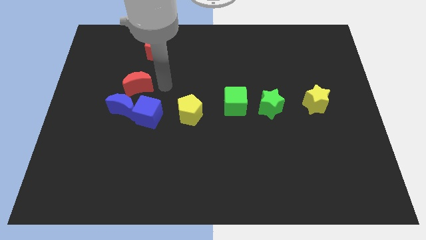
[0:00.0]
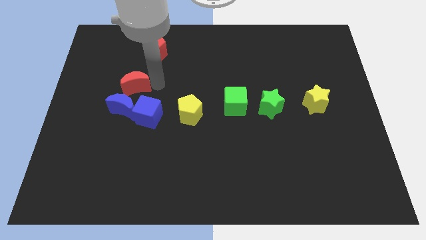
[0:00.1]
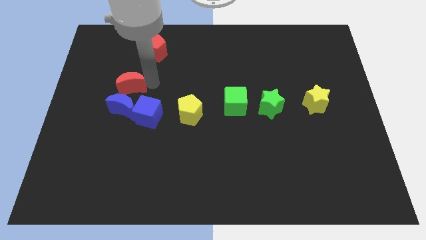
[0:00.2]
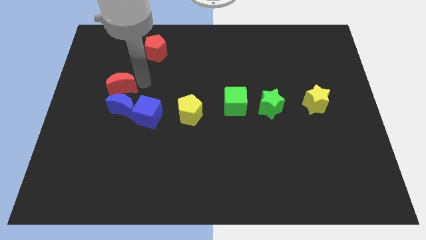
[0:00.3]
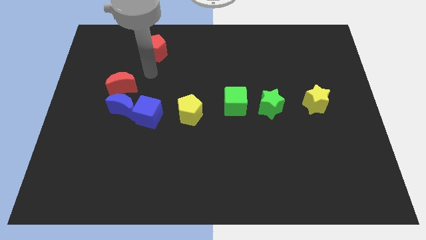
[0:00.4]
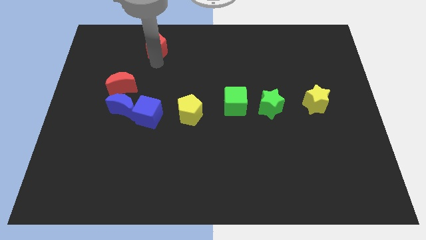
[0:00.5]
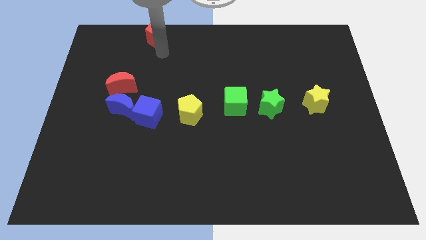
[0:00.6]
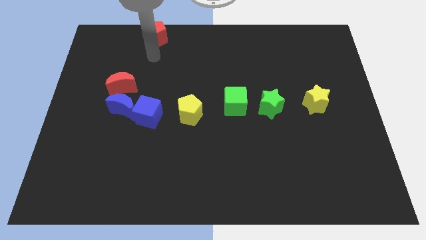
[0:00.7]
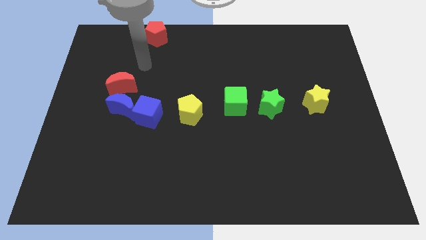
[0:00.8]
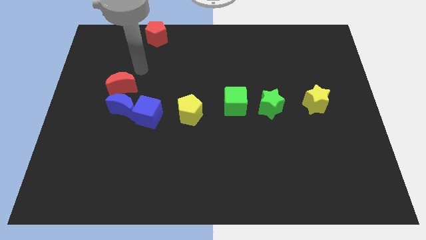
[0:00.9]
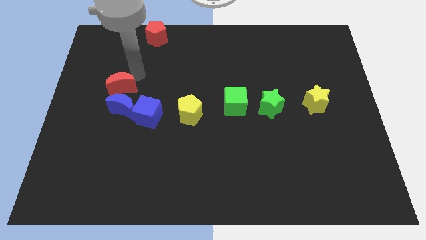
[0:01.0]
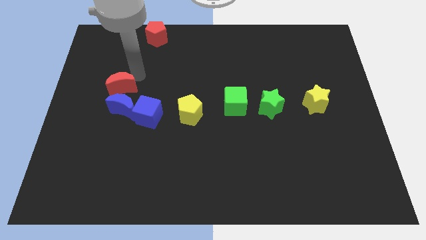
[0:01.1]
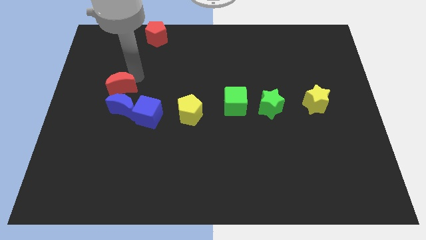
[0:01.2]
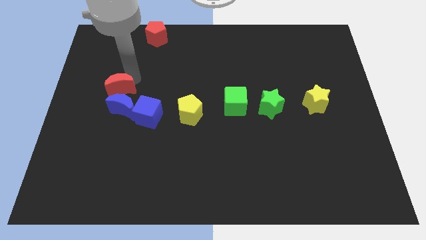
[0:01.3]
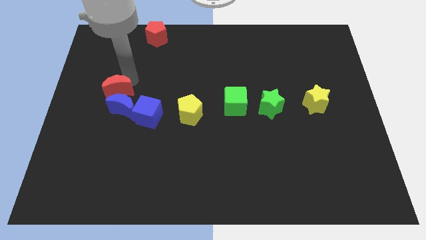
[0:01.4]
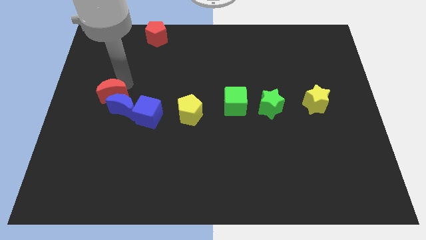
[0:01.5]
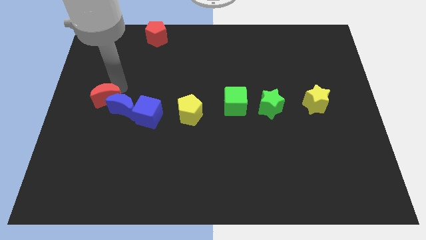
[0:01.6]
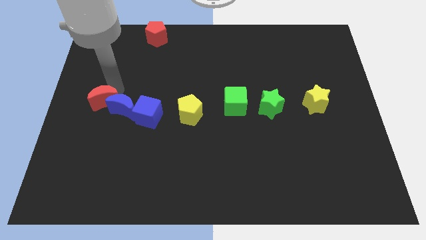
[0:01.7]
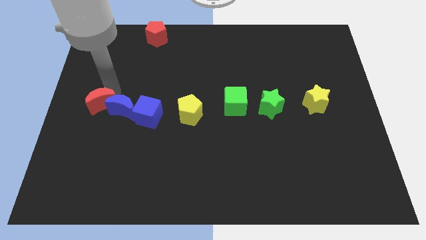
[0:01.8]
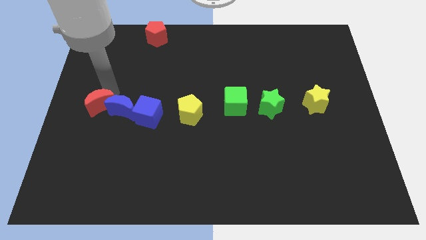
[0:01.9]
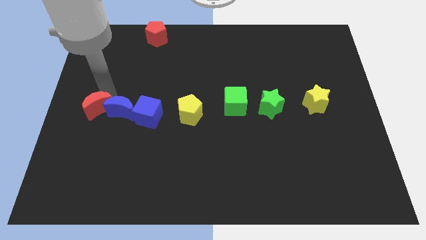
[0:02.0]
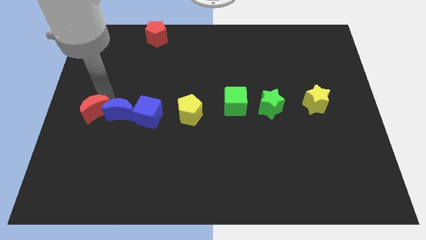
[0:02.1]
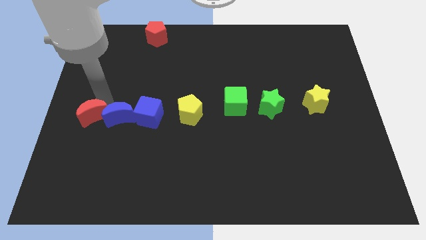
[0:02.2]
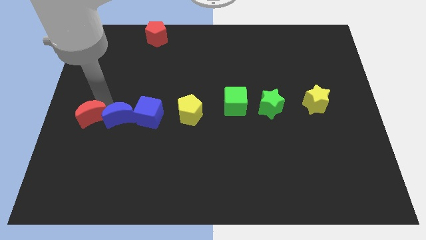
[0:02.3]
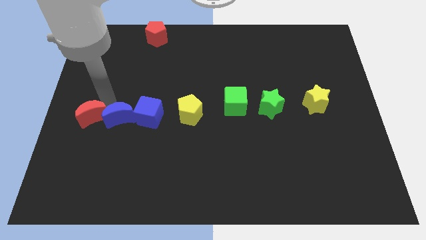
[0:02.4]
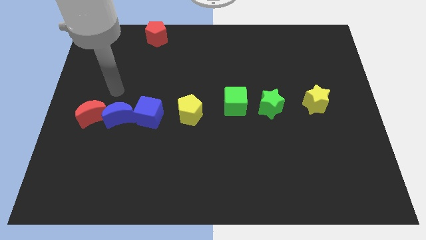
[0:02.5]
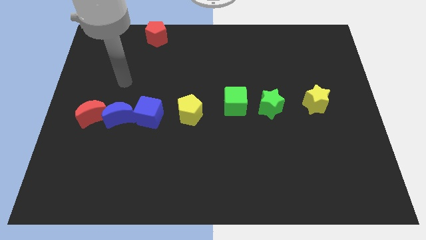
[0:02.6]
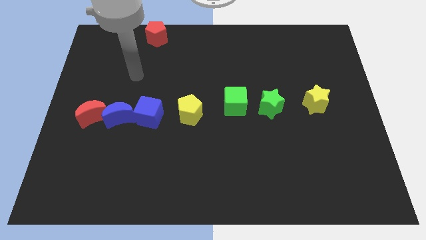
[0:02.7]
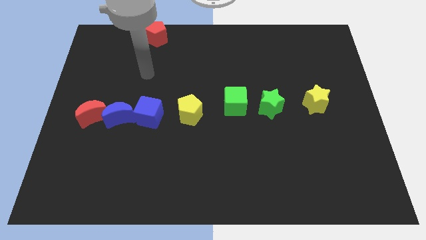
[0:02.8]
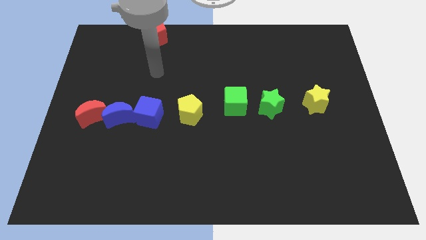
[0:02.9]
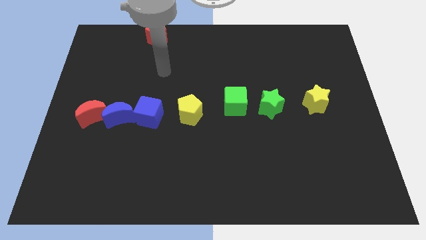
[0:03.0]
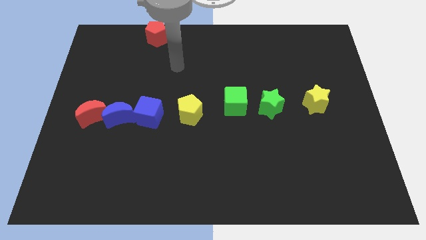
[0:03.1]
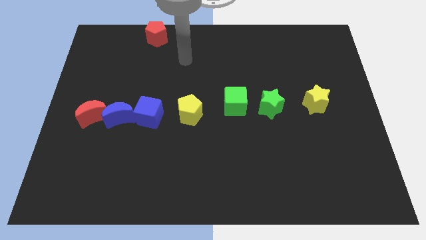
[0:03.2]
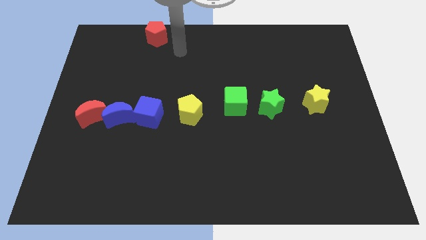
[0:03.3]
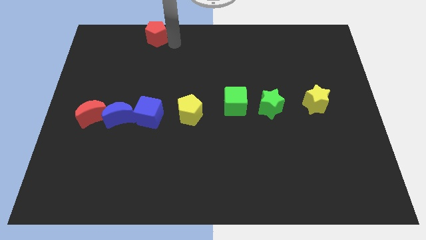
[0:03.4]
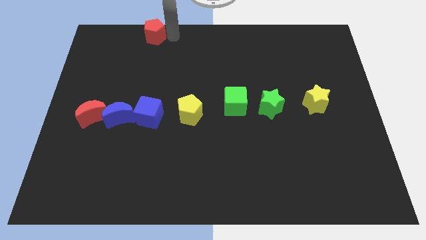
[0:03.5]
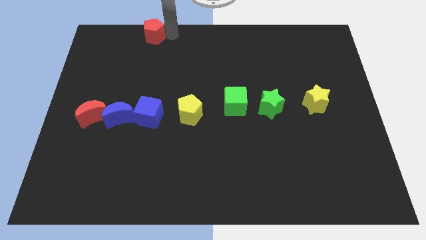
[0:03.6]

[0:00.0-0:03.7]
move red moon to the left of blue moon

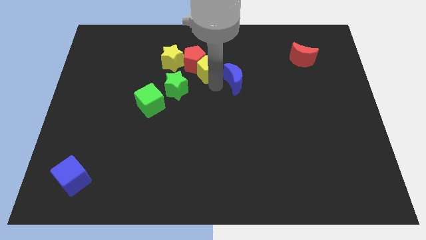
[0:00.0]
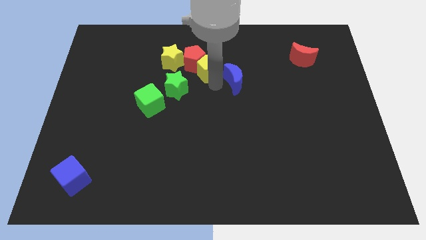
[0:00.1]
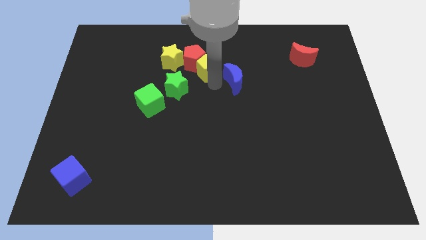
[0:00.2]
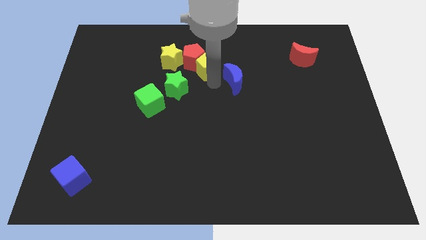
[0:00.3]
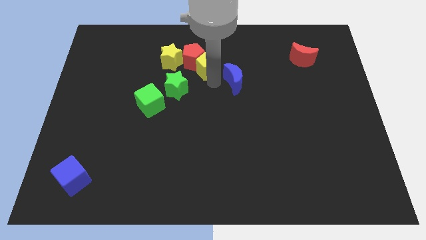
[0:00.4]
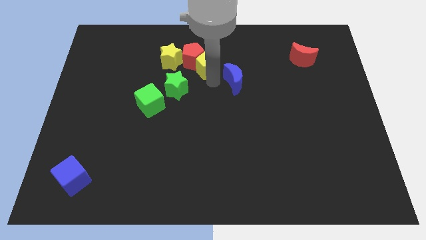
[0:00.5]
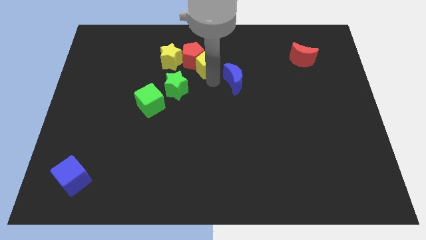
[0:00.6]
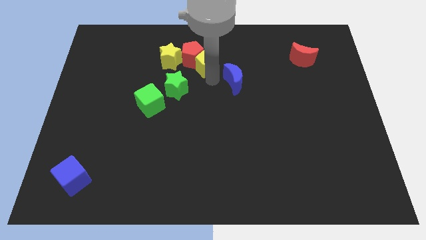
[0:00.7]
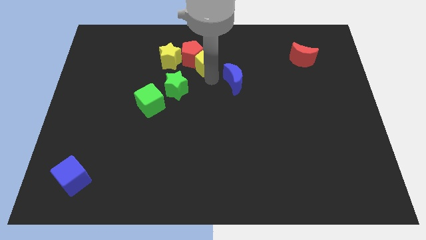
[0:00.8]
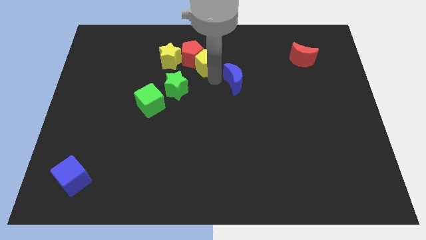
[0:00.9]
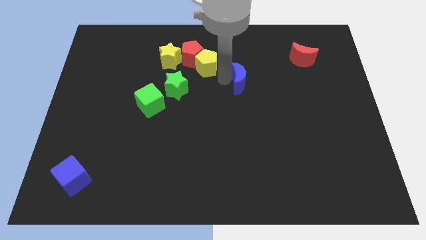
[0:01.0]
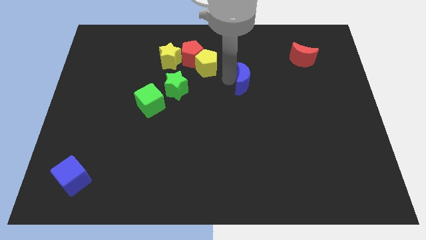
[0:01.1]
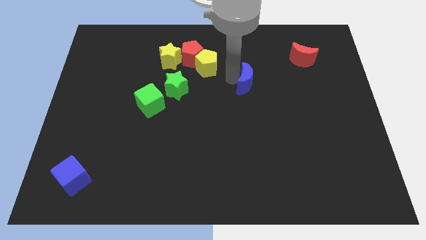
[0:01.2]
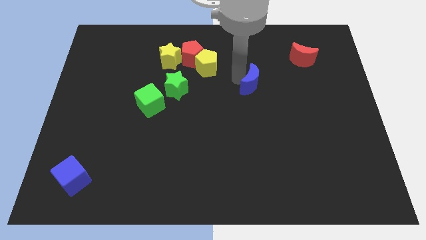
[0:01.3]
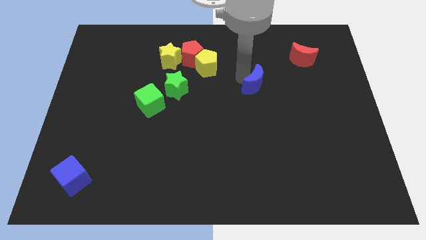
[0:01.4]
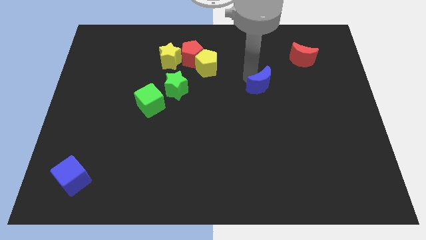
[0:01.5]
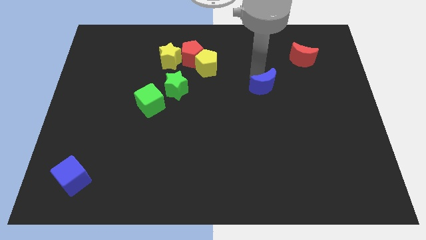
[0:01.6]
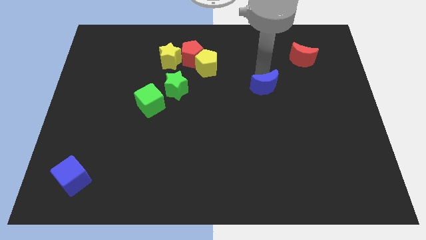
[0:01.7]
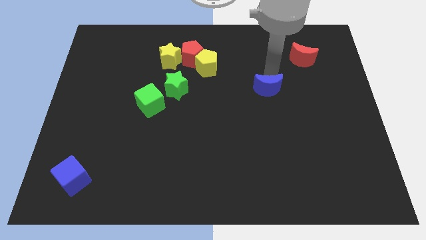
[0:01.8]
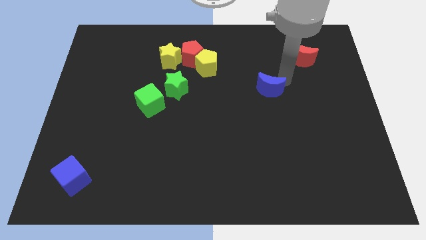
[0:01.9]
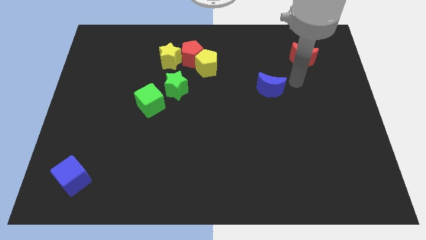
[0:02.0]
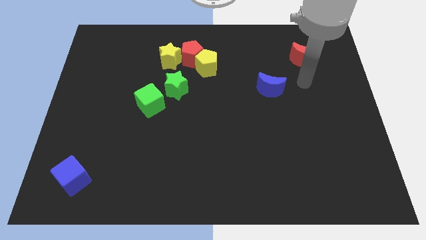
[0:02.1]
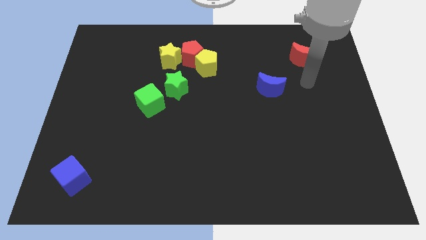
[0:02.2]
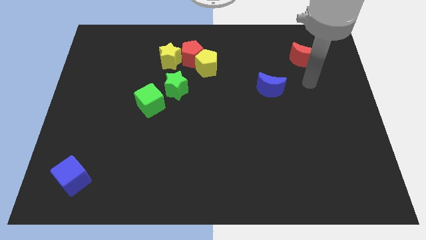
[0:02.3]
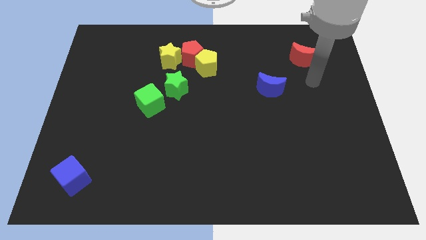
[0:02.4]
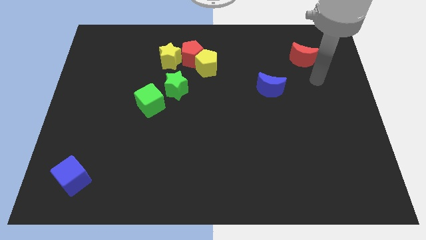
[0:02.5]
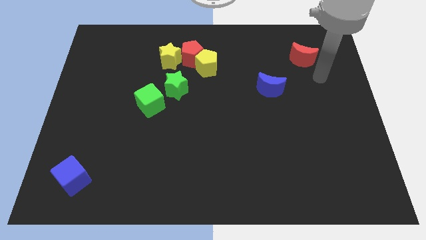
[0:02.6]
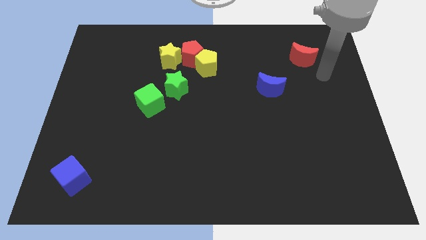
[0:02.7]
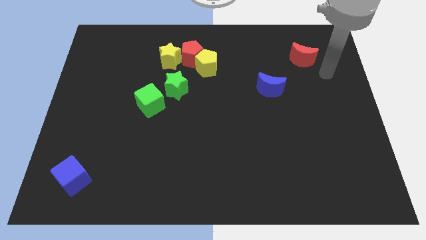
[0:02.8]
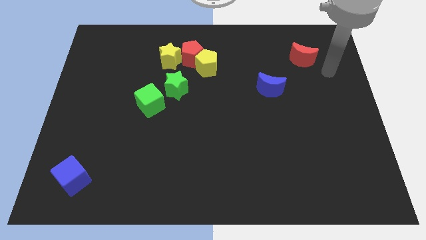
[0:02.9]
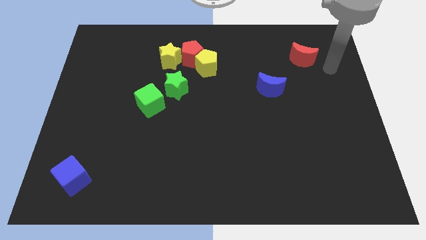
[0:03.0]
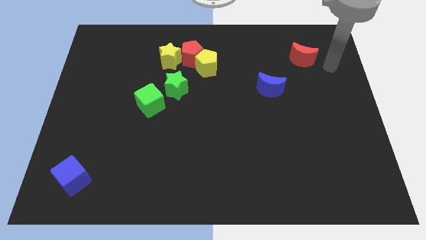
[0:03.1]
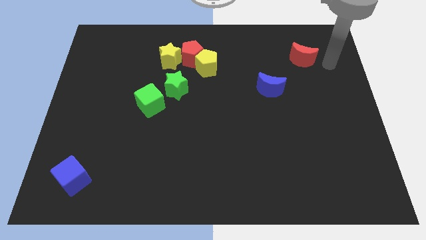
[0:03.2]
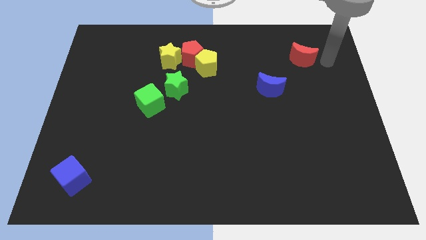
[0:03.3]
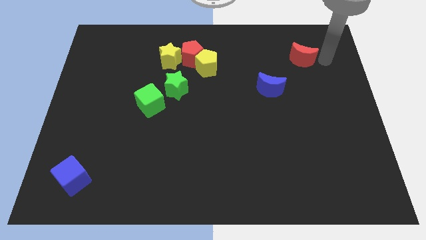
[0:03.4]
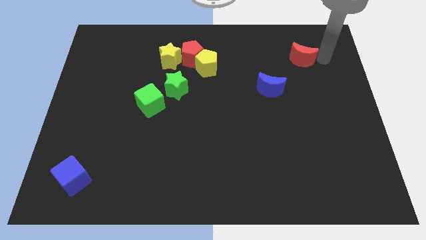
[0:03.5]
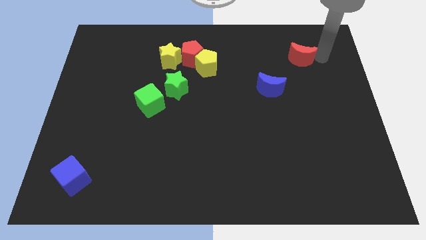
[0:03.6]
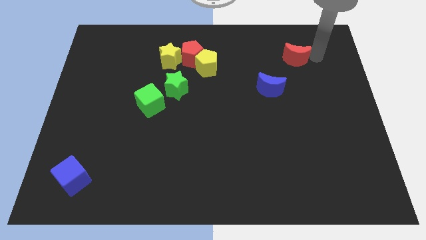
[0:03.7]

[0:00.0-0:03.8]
move the blue moon diagonal to the red moon

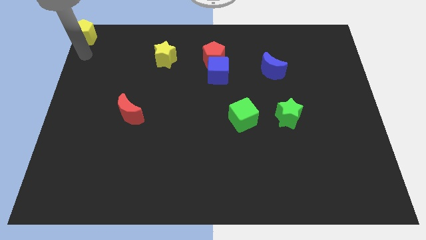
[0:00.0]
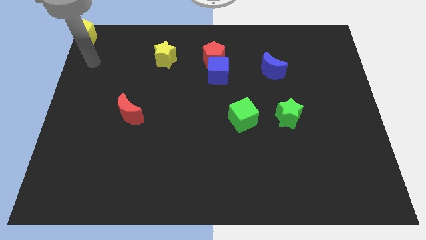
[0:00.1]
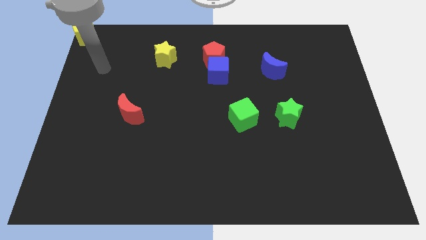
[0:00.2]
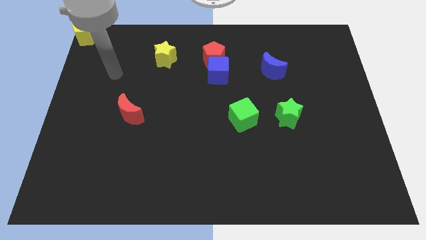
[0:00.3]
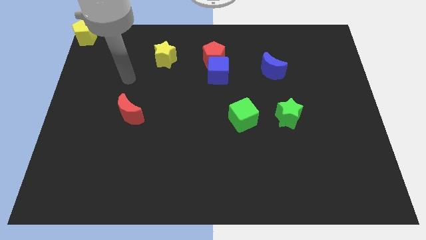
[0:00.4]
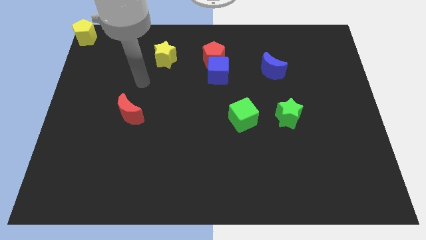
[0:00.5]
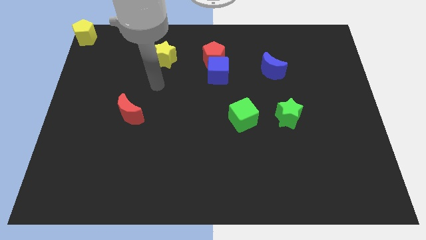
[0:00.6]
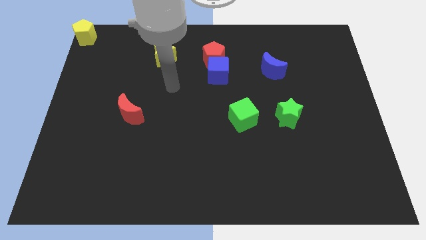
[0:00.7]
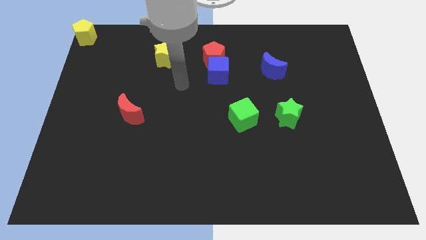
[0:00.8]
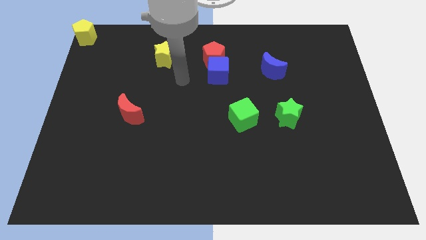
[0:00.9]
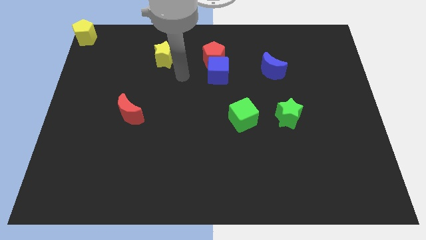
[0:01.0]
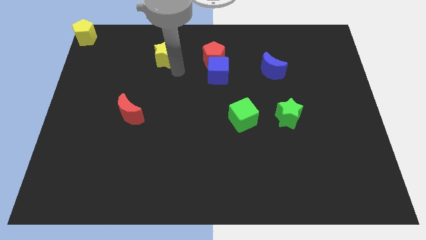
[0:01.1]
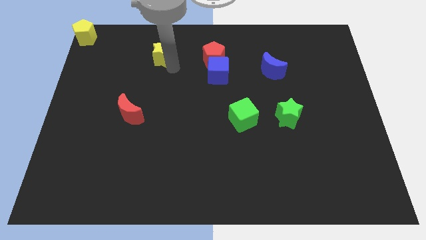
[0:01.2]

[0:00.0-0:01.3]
move your arm towards the yellow star
